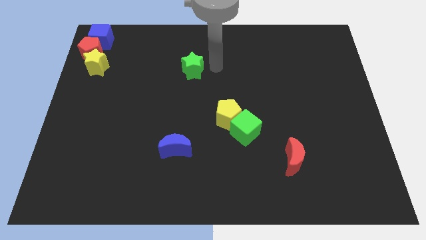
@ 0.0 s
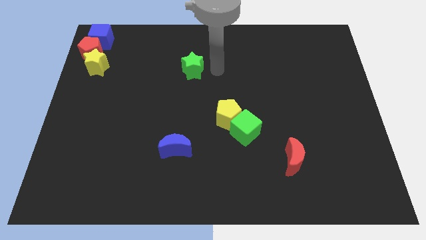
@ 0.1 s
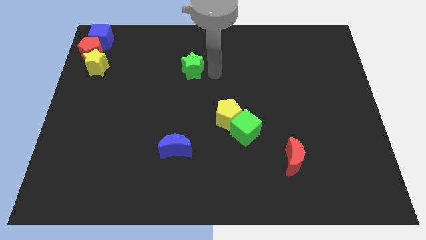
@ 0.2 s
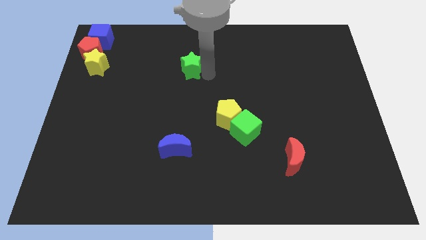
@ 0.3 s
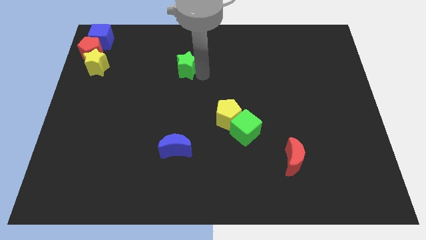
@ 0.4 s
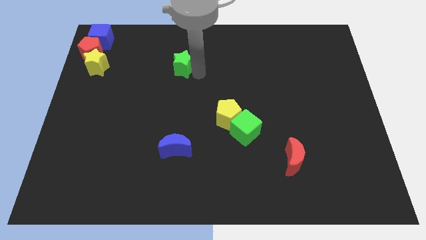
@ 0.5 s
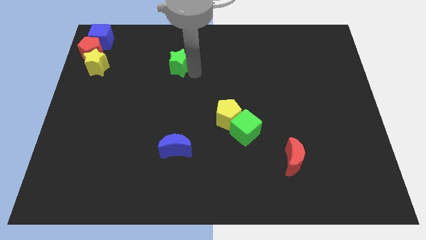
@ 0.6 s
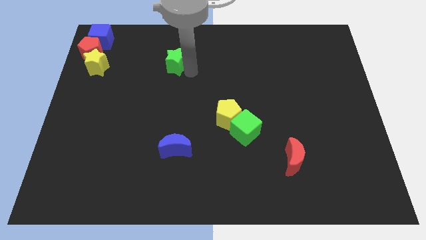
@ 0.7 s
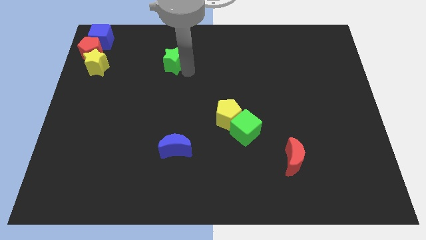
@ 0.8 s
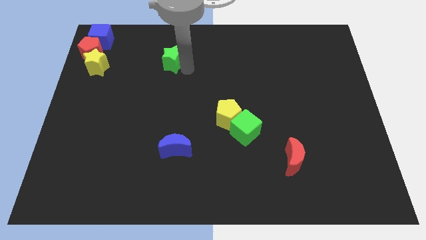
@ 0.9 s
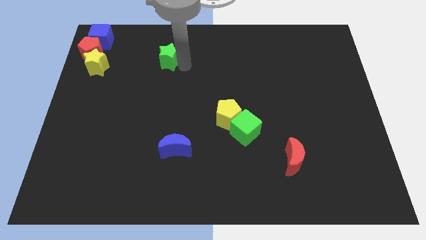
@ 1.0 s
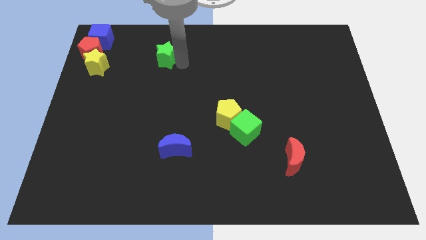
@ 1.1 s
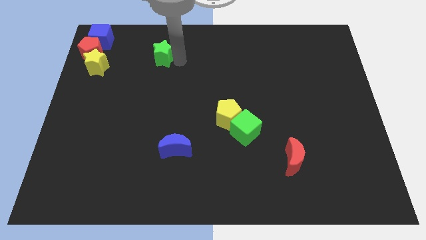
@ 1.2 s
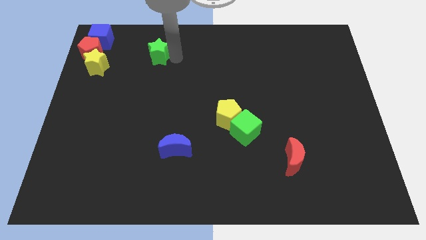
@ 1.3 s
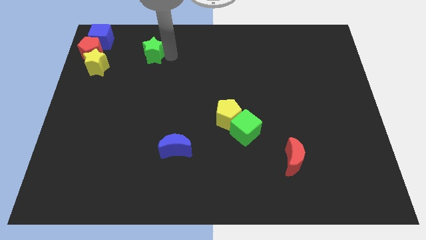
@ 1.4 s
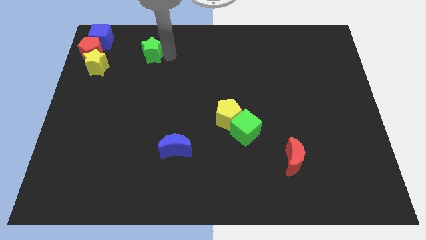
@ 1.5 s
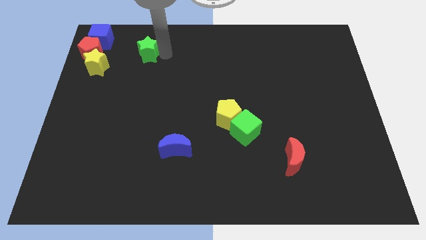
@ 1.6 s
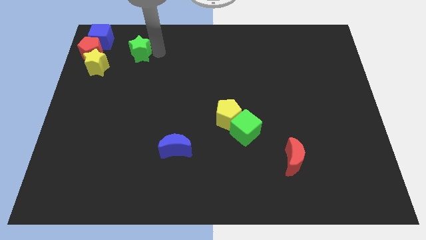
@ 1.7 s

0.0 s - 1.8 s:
drag the green star towards the group of blocks

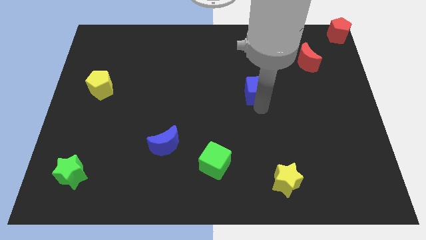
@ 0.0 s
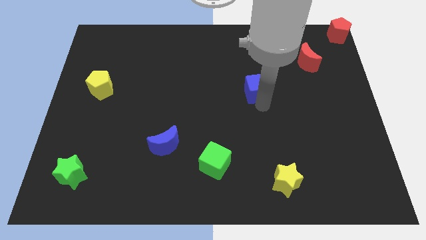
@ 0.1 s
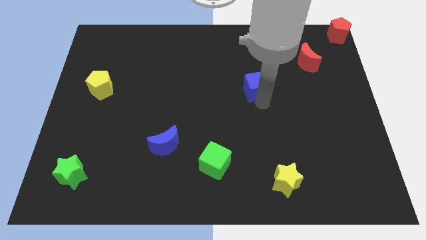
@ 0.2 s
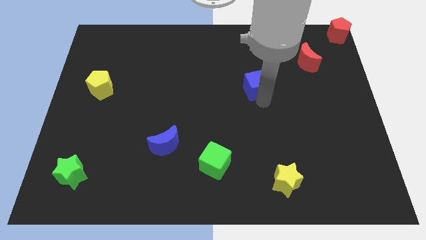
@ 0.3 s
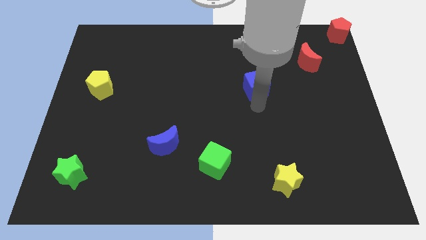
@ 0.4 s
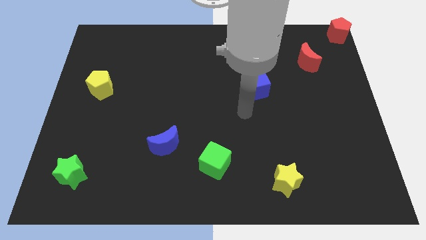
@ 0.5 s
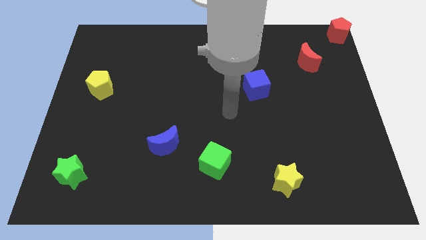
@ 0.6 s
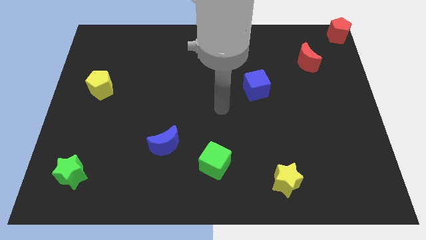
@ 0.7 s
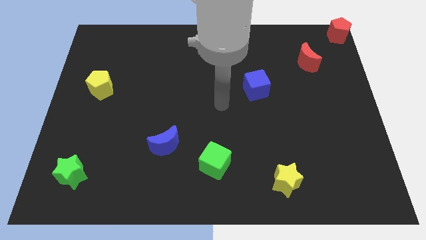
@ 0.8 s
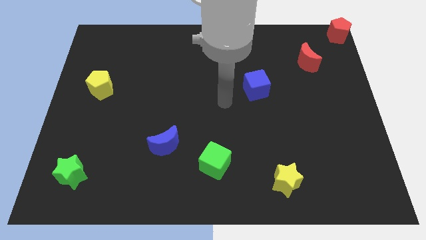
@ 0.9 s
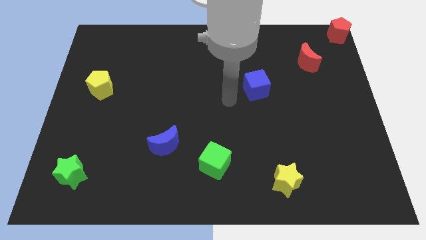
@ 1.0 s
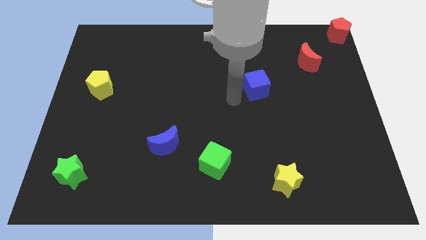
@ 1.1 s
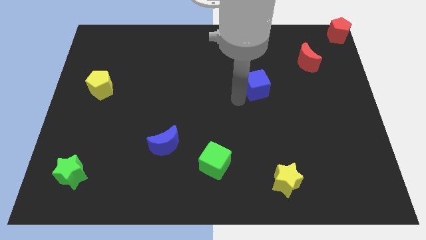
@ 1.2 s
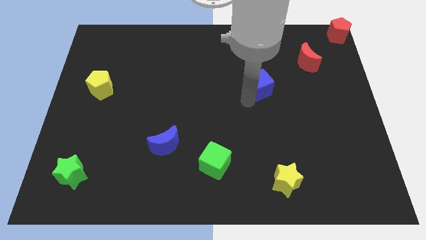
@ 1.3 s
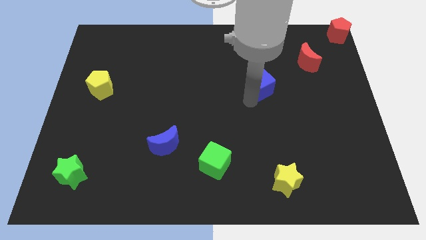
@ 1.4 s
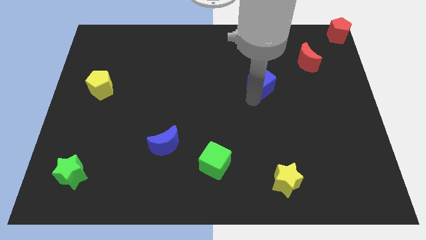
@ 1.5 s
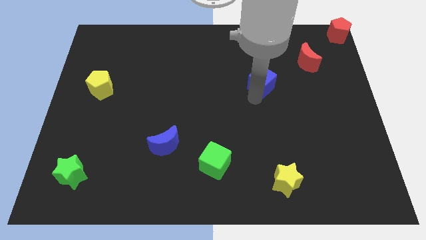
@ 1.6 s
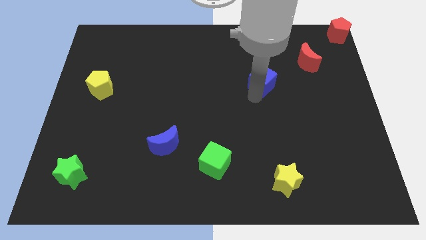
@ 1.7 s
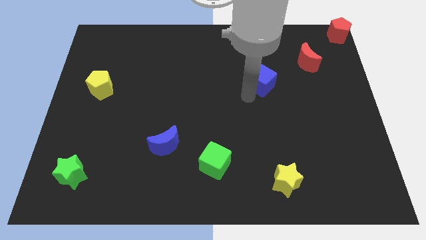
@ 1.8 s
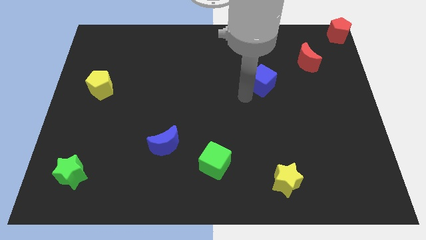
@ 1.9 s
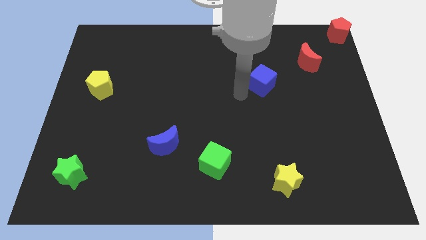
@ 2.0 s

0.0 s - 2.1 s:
push the blue cube towards the red crescent

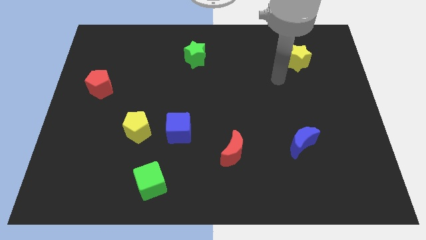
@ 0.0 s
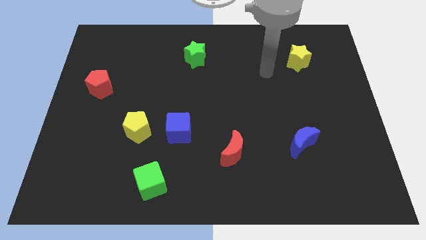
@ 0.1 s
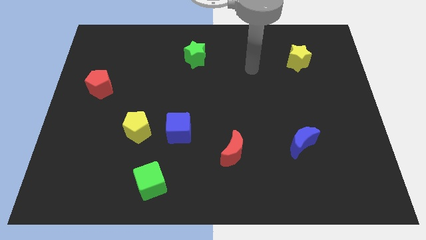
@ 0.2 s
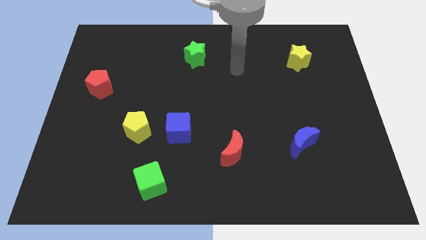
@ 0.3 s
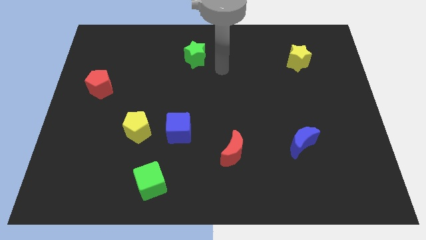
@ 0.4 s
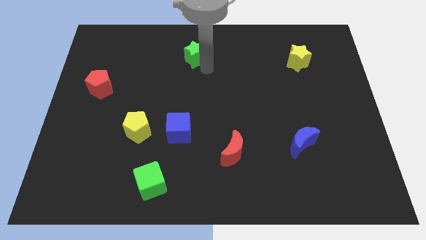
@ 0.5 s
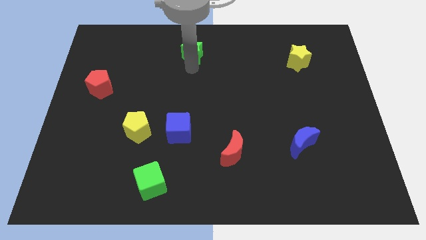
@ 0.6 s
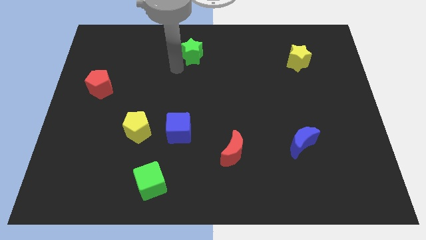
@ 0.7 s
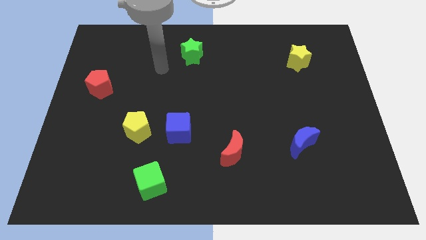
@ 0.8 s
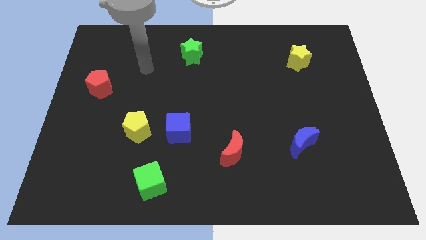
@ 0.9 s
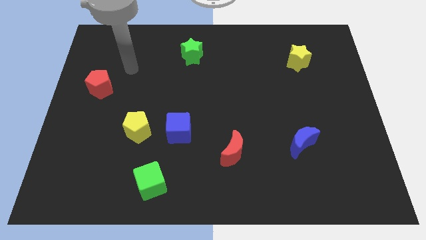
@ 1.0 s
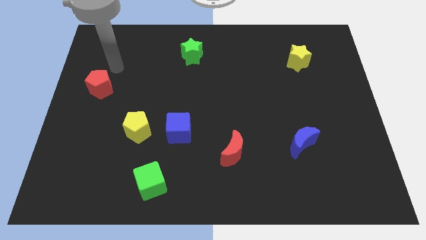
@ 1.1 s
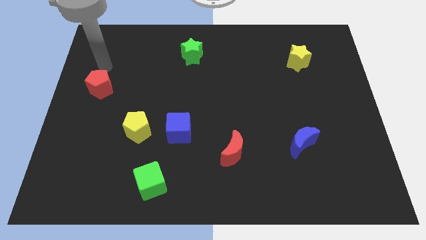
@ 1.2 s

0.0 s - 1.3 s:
move your arm above the red pentagon

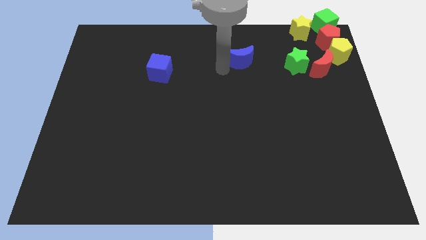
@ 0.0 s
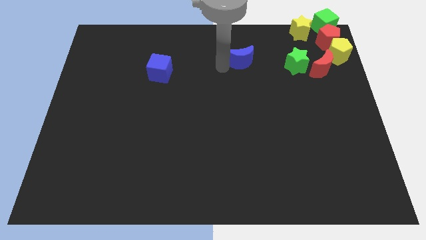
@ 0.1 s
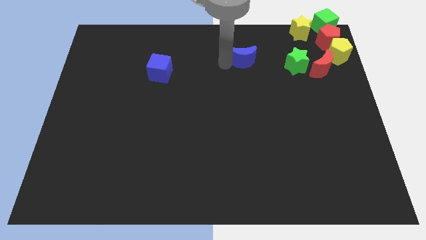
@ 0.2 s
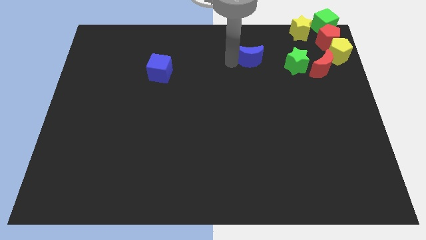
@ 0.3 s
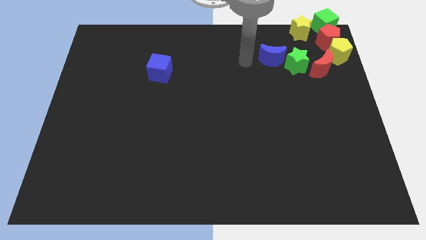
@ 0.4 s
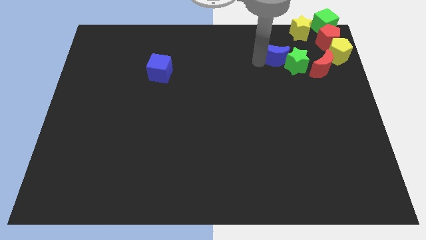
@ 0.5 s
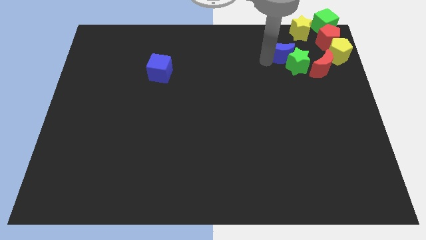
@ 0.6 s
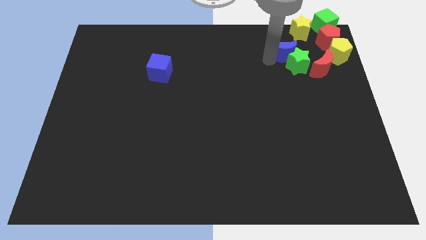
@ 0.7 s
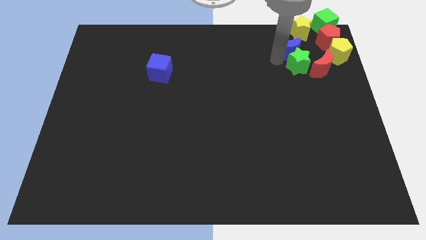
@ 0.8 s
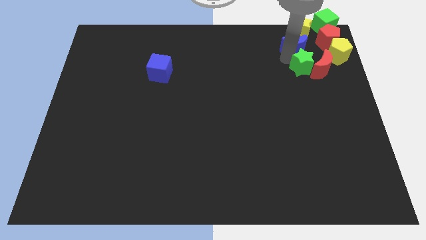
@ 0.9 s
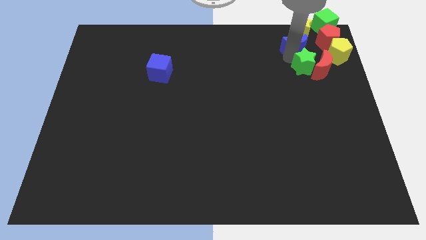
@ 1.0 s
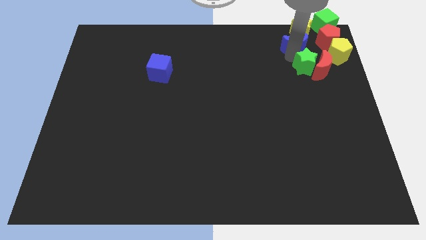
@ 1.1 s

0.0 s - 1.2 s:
move blue moon above the green star

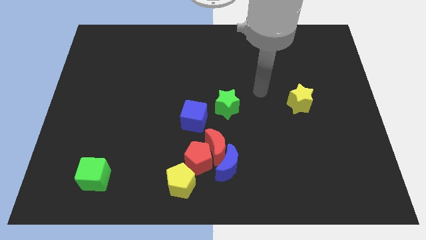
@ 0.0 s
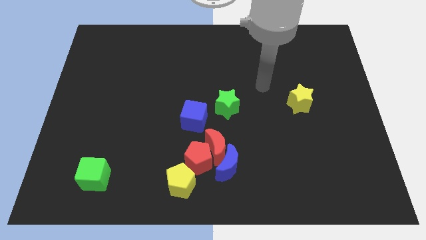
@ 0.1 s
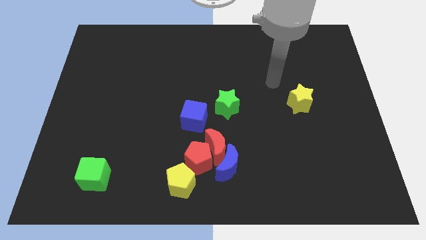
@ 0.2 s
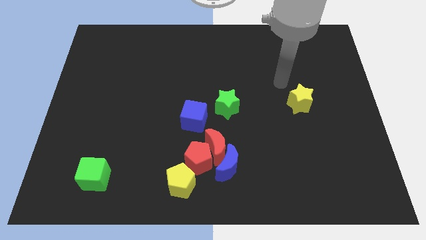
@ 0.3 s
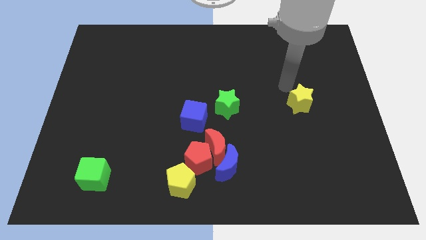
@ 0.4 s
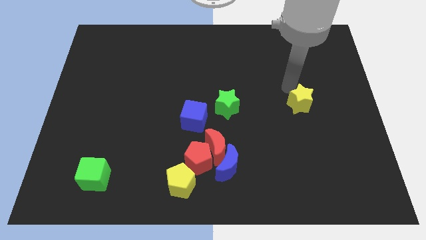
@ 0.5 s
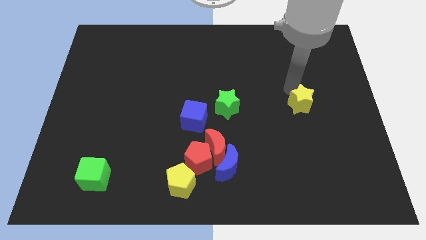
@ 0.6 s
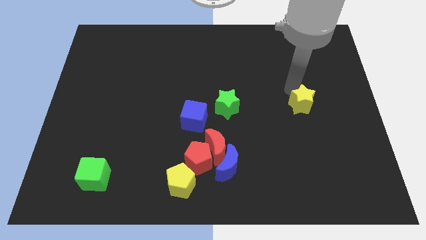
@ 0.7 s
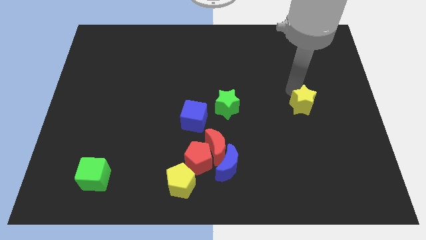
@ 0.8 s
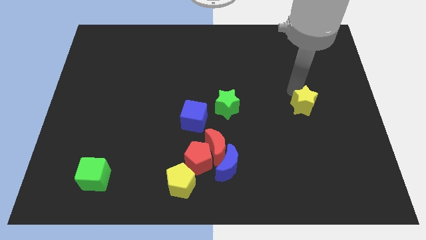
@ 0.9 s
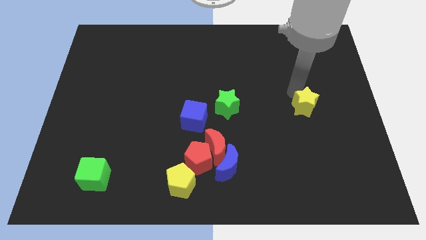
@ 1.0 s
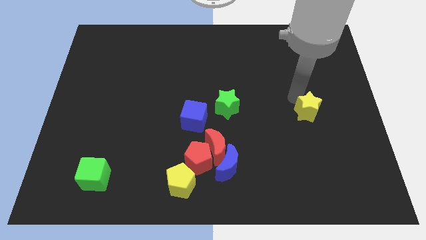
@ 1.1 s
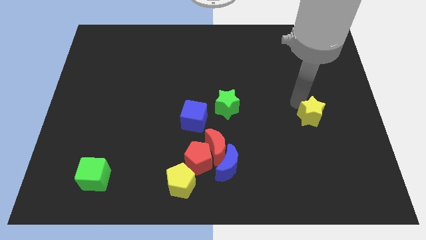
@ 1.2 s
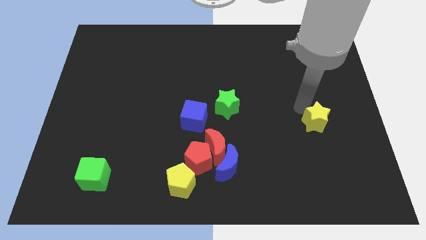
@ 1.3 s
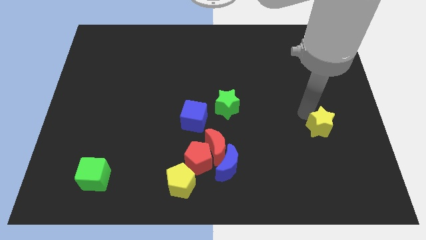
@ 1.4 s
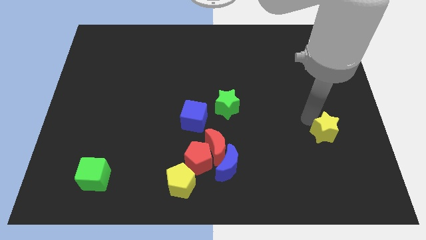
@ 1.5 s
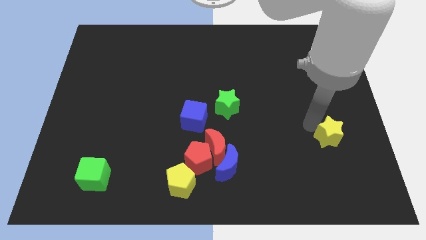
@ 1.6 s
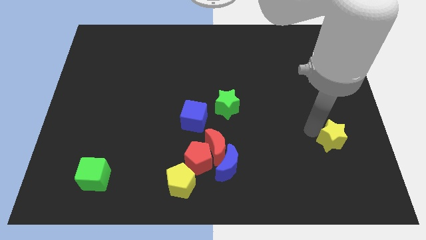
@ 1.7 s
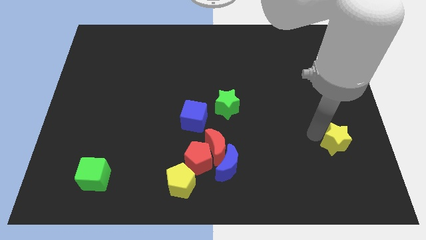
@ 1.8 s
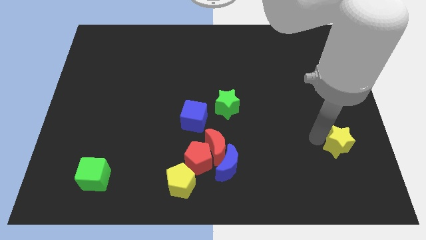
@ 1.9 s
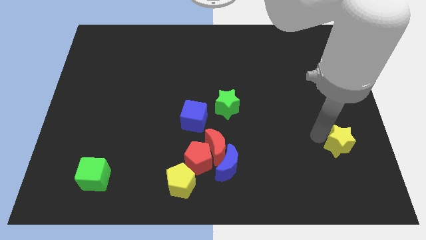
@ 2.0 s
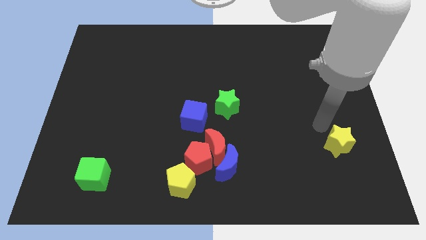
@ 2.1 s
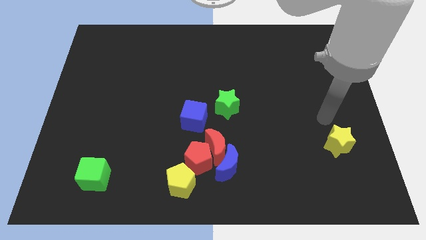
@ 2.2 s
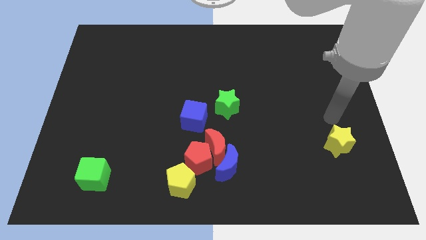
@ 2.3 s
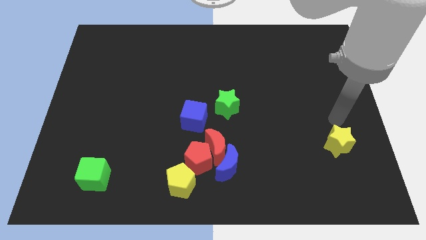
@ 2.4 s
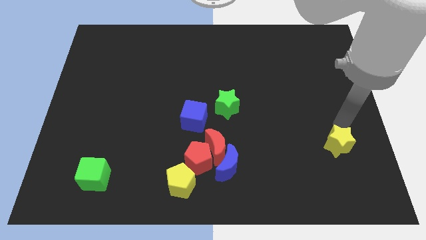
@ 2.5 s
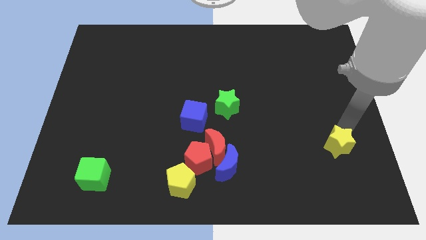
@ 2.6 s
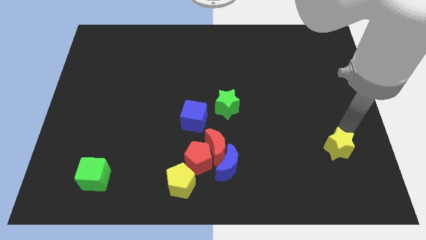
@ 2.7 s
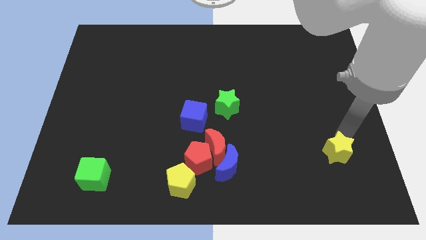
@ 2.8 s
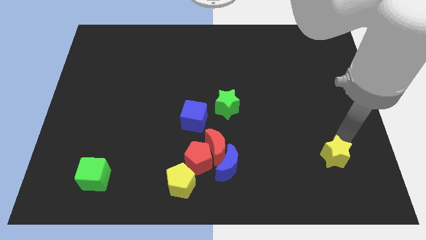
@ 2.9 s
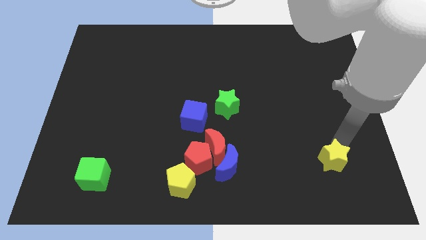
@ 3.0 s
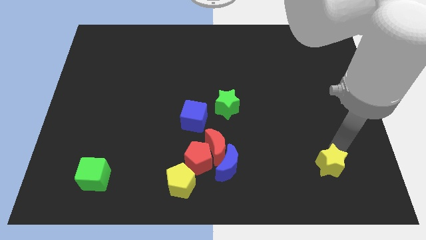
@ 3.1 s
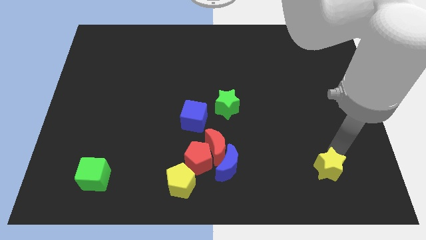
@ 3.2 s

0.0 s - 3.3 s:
move the yellow star to the right of the blue moon
